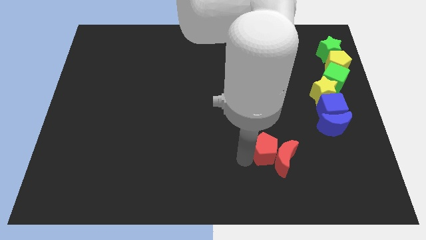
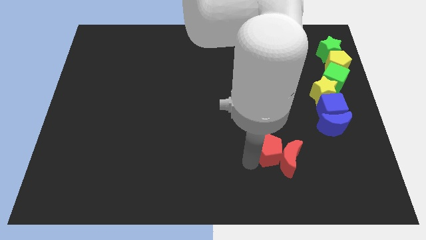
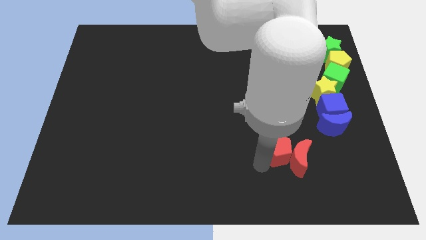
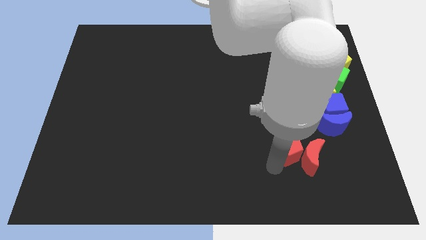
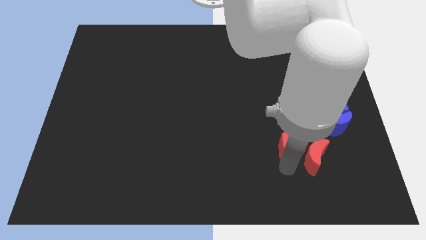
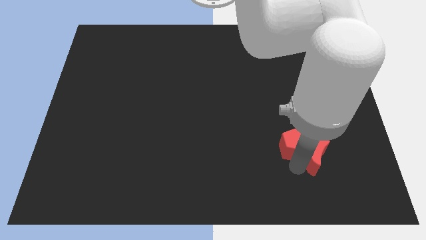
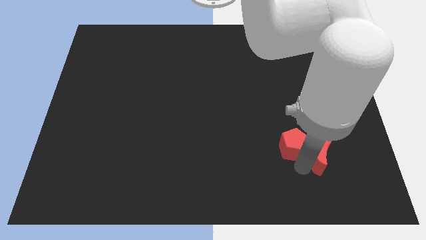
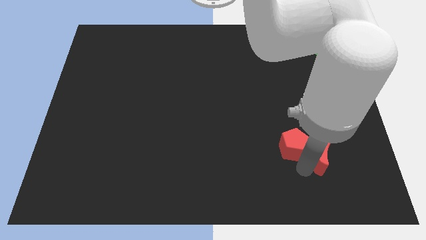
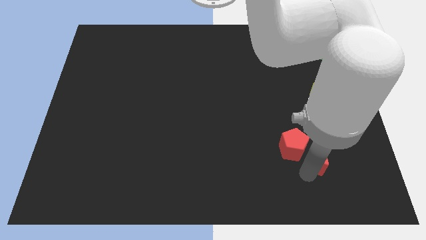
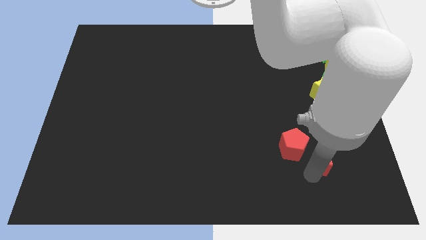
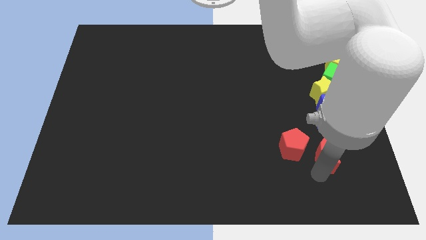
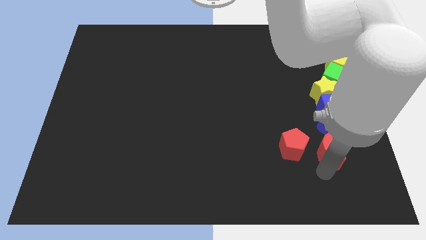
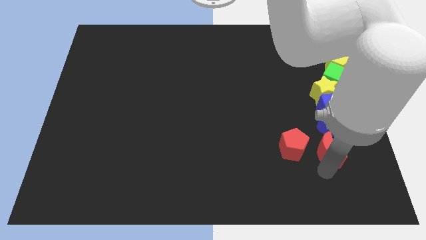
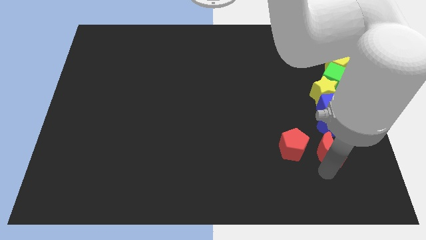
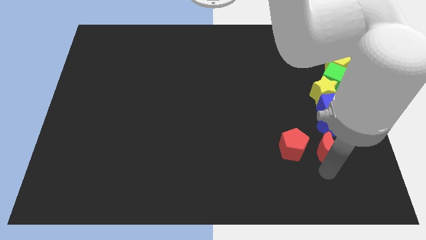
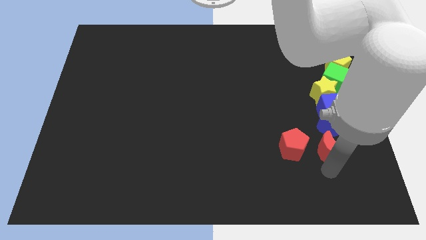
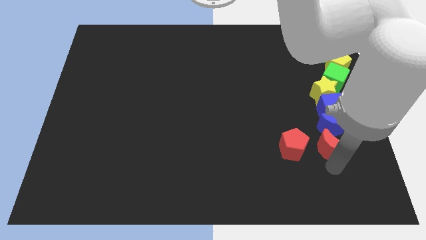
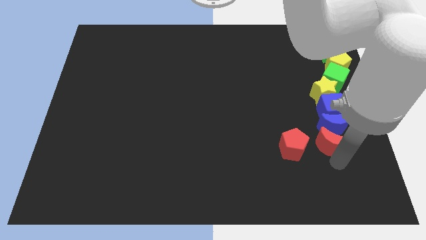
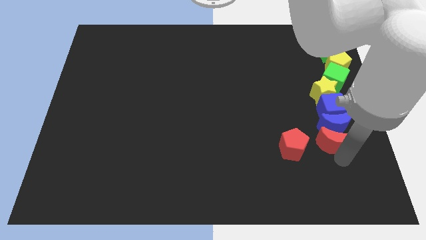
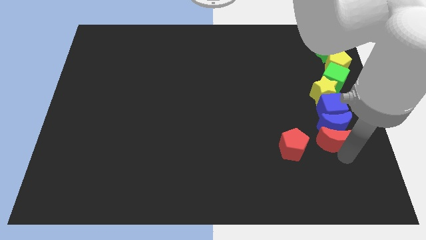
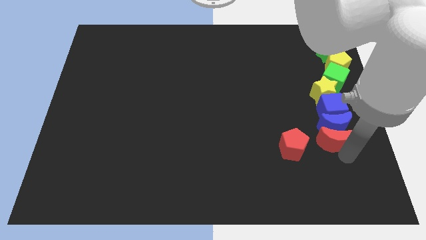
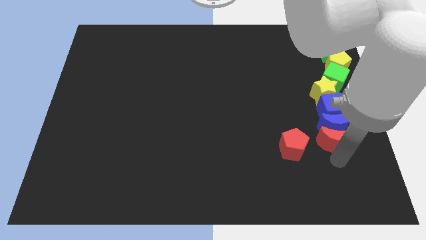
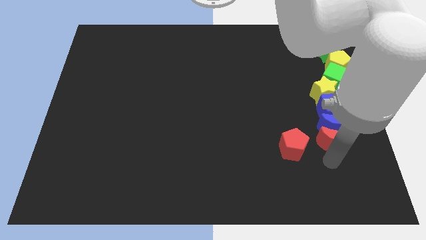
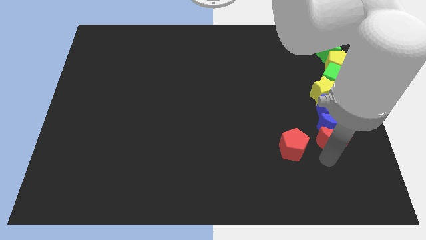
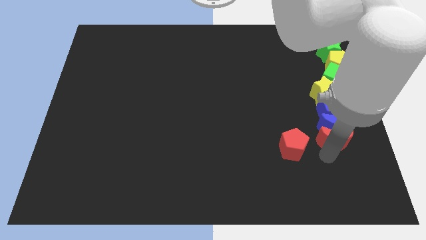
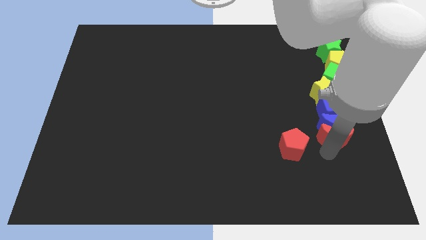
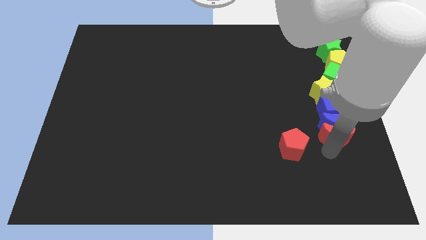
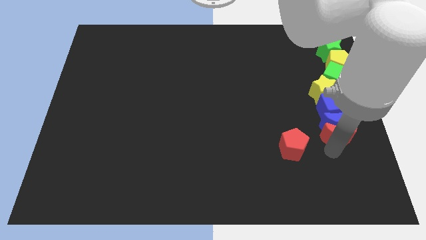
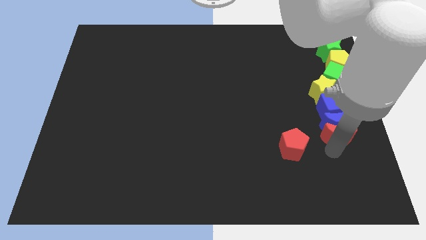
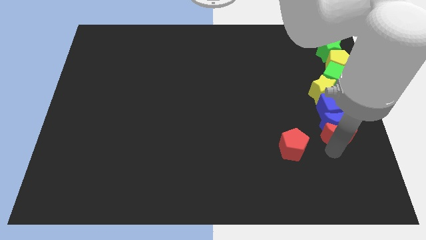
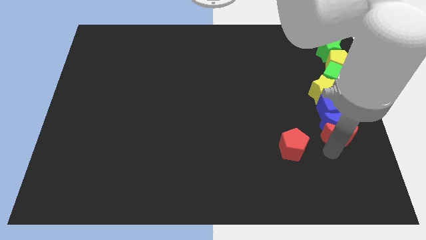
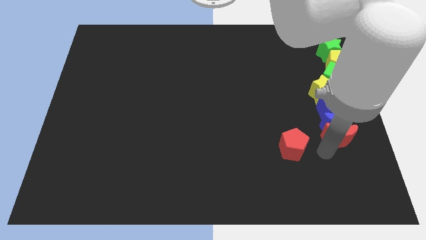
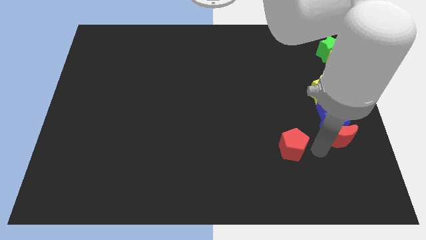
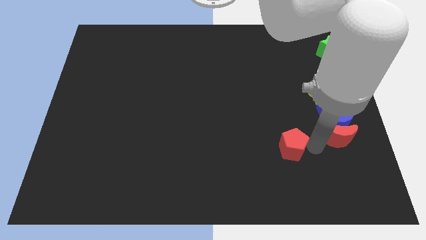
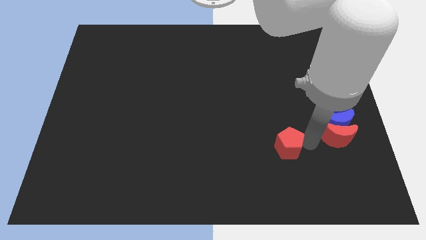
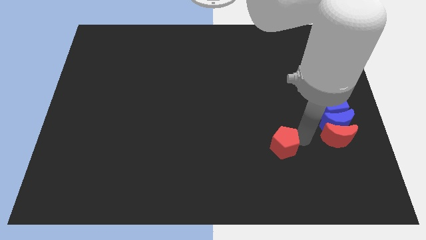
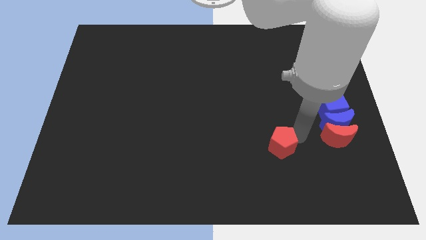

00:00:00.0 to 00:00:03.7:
move the red crescent into the blue crescent

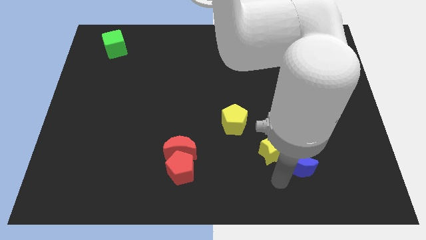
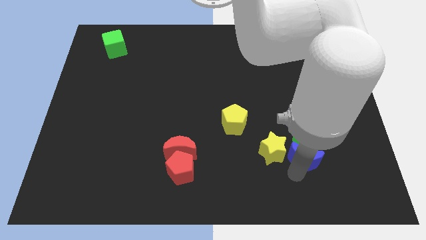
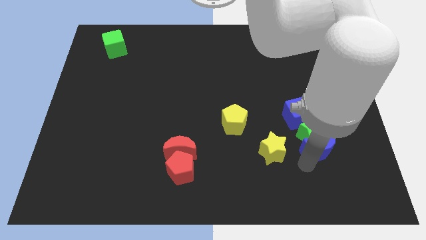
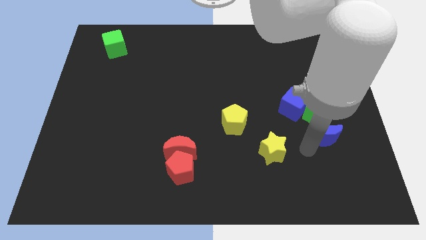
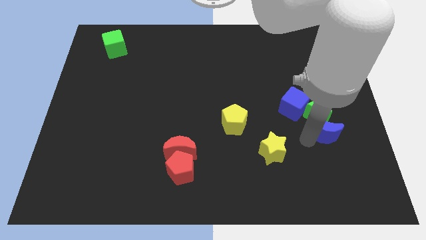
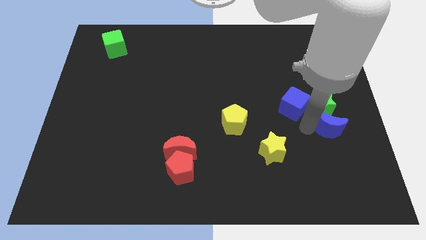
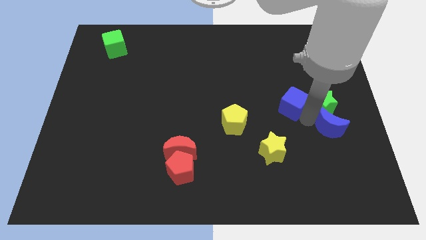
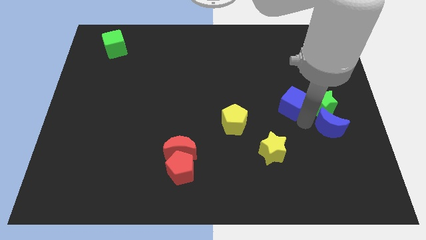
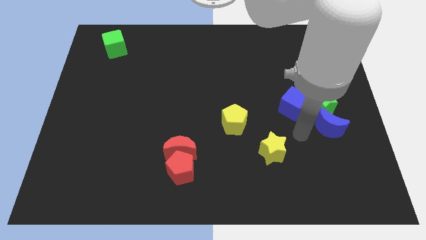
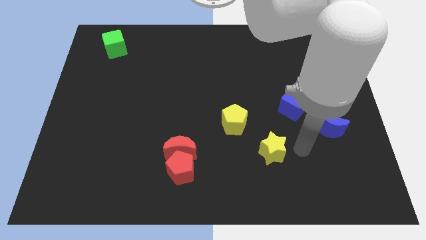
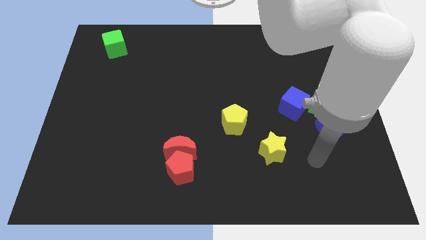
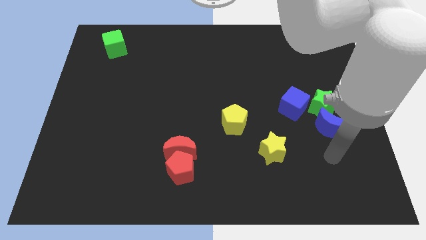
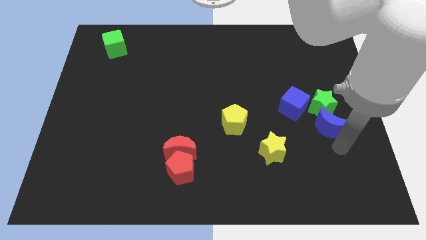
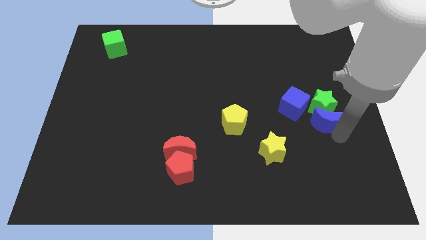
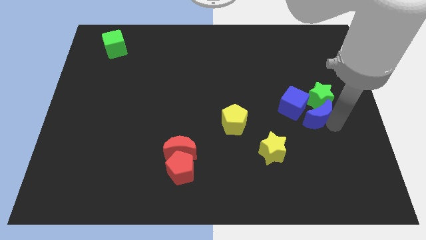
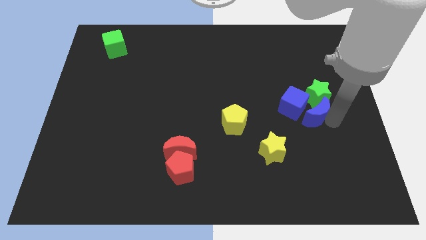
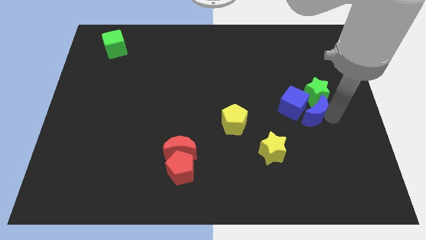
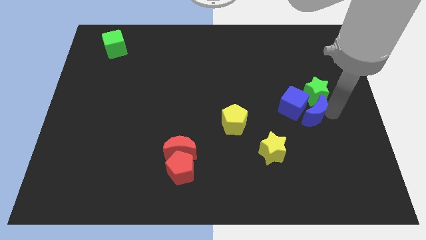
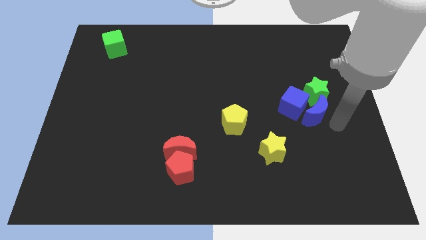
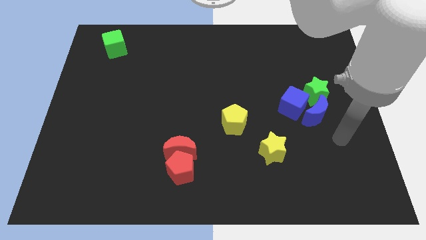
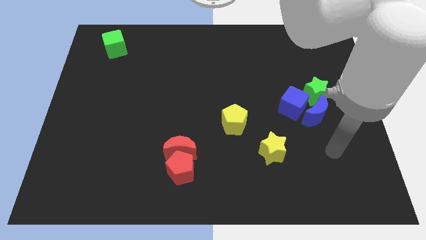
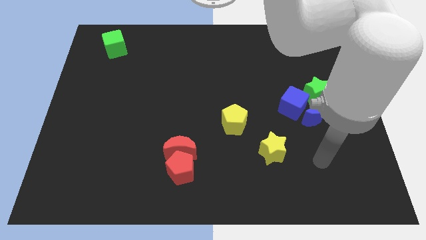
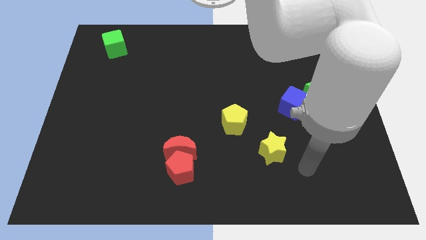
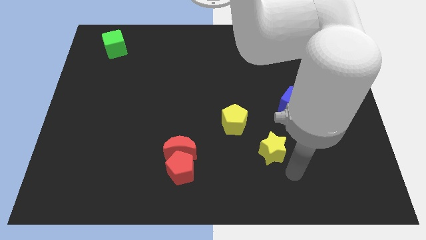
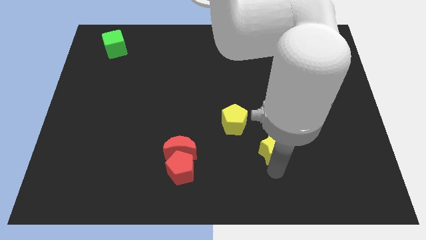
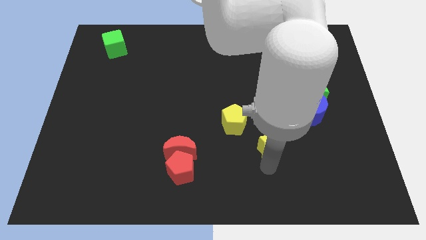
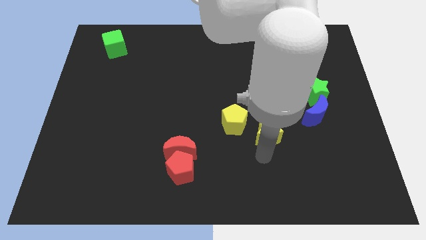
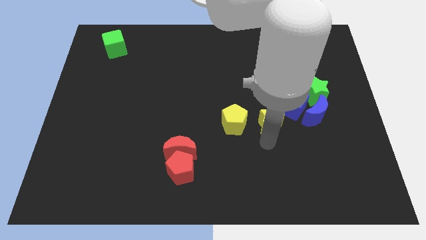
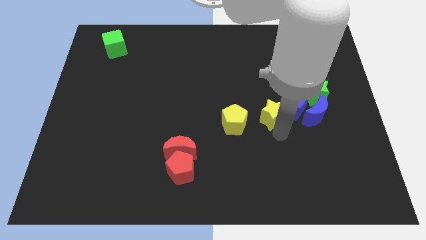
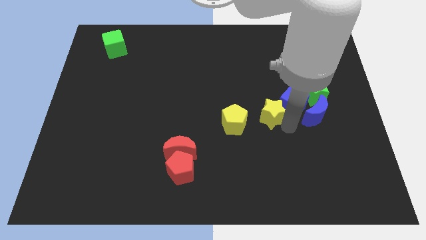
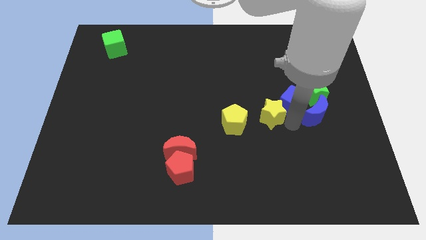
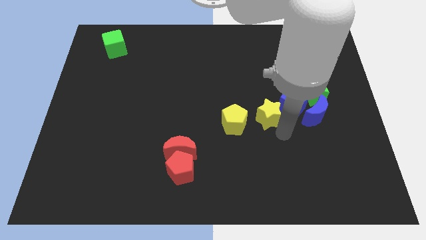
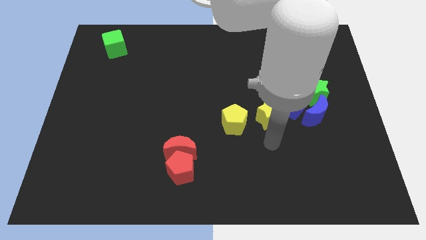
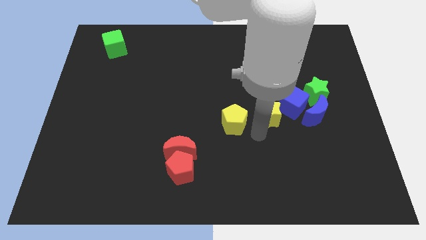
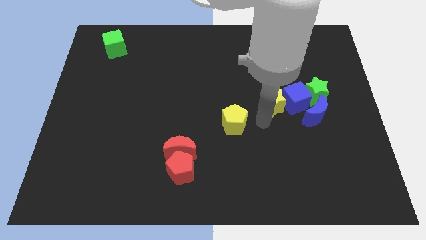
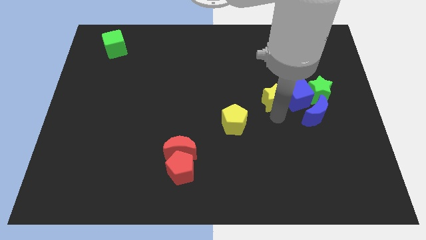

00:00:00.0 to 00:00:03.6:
push yellow star and blue crescent towards the blue cube

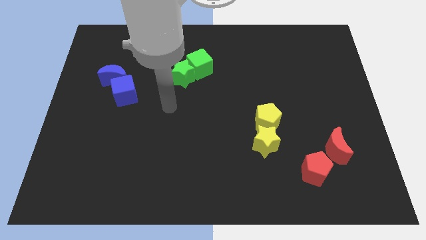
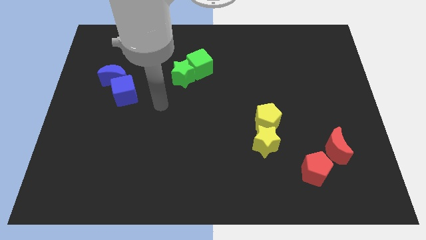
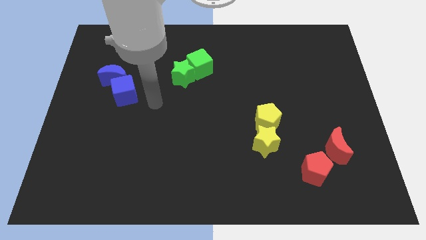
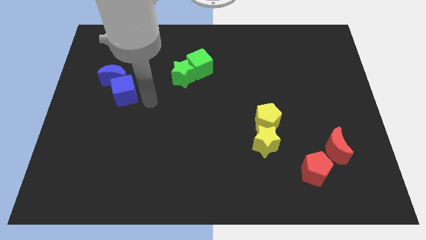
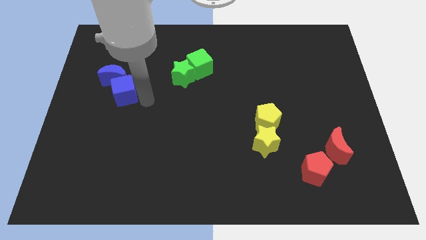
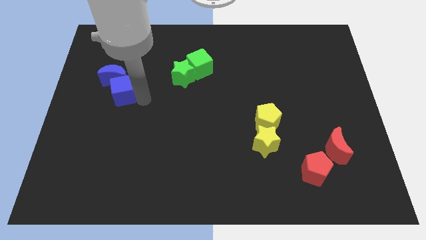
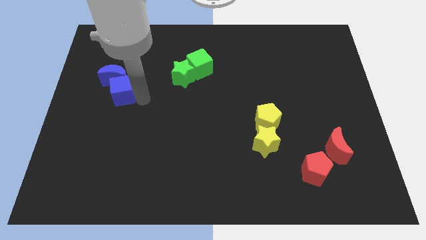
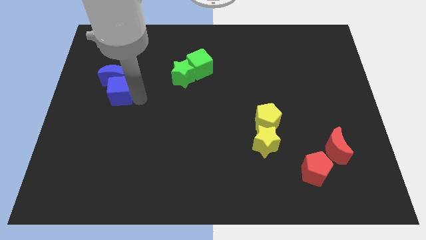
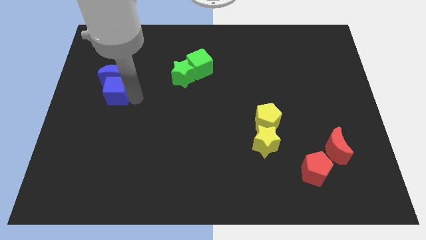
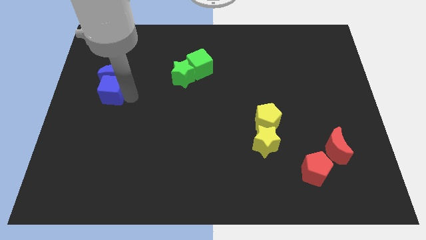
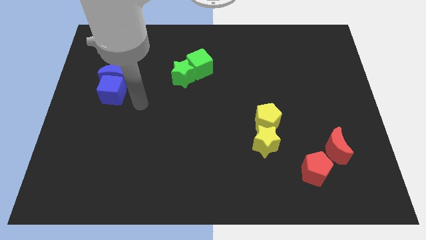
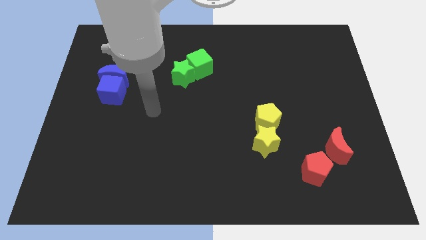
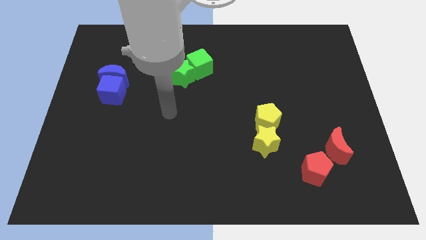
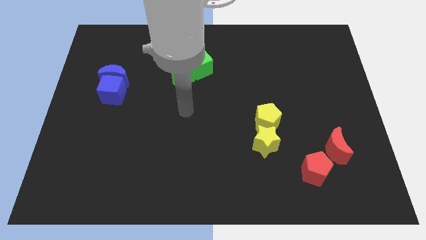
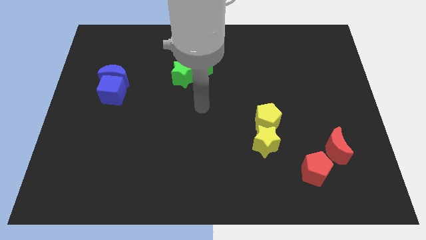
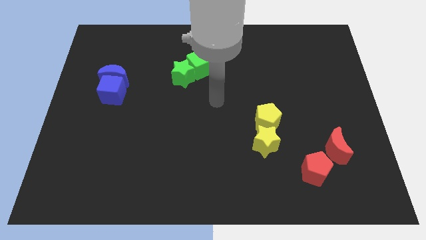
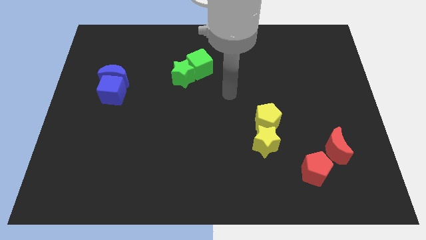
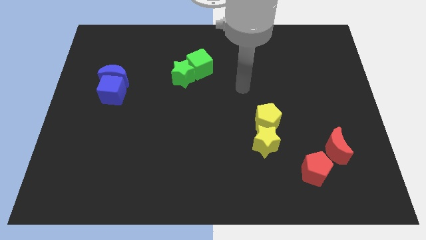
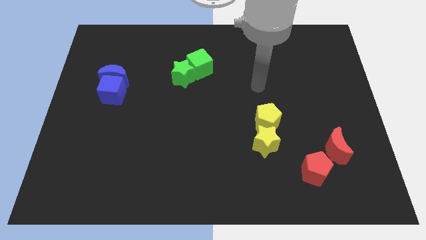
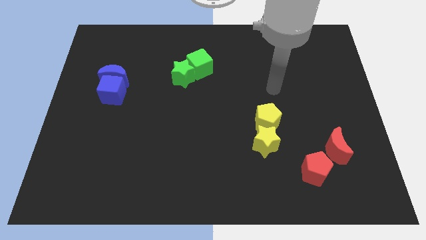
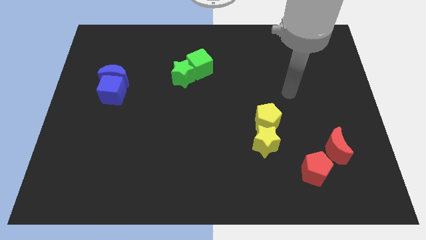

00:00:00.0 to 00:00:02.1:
move the blue cube slightly to the left center of the board
